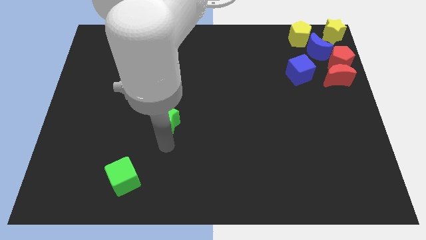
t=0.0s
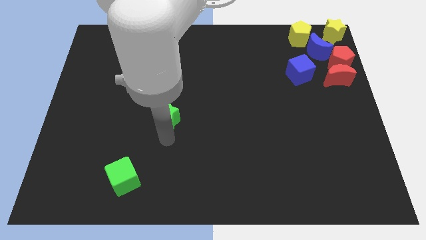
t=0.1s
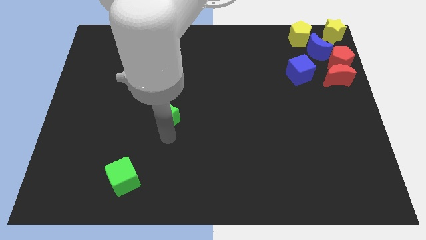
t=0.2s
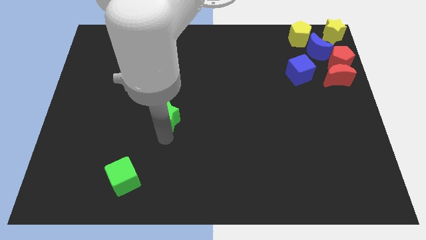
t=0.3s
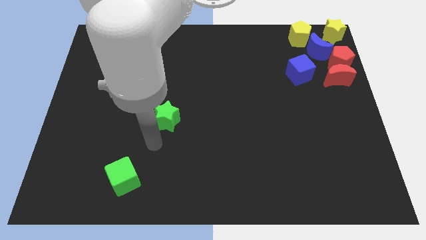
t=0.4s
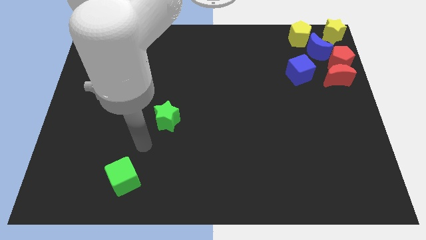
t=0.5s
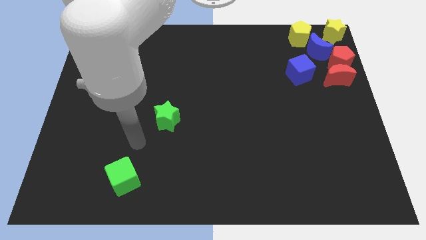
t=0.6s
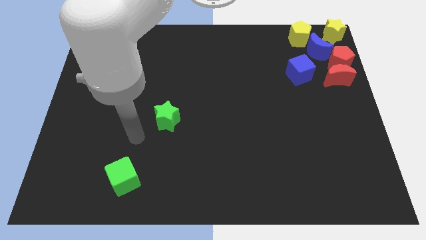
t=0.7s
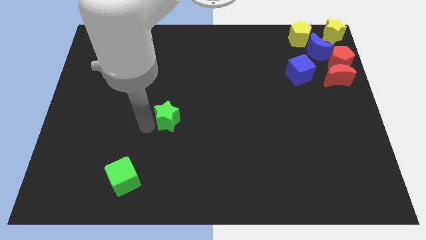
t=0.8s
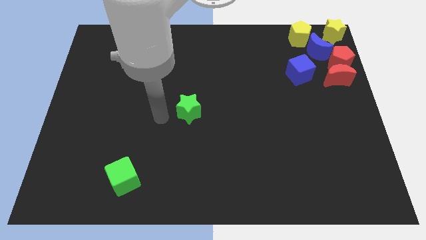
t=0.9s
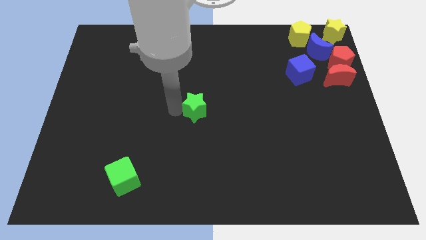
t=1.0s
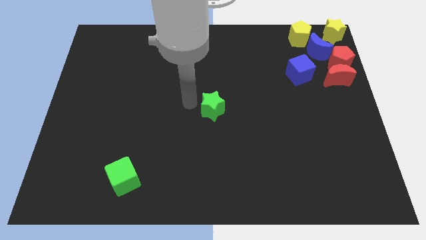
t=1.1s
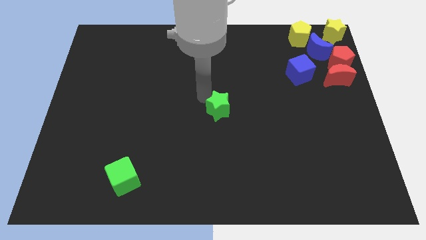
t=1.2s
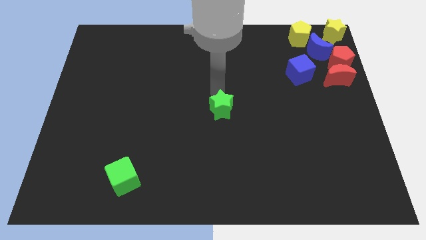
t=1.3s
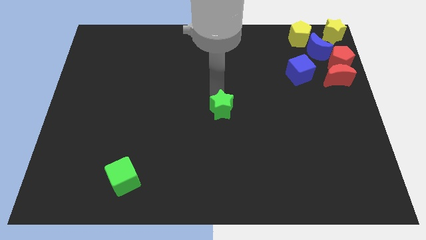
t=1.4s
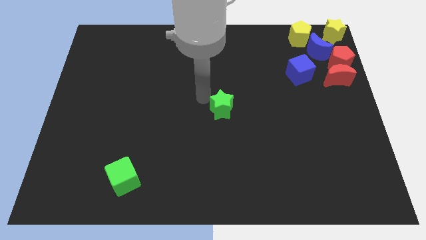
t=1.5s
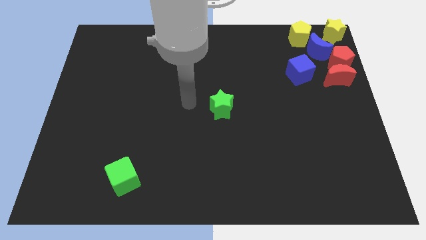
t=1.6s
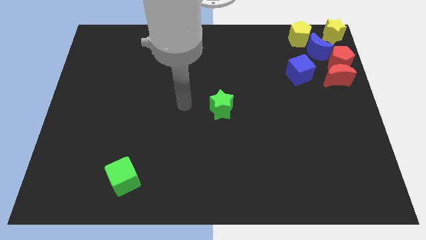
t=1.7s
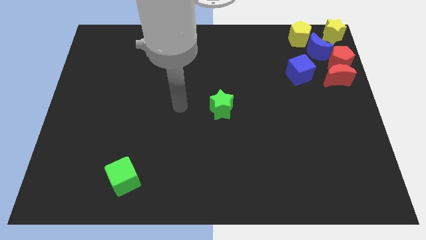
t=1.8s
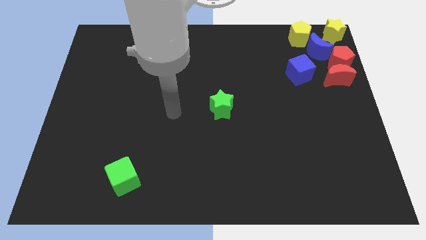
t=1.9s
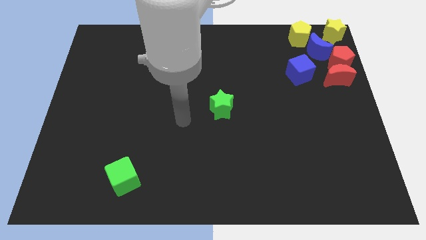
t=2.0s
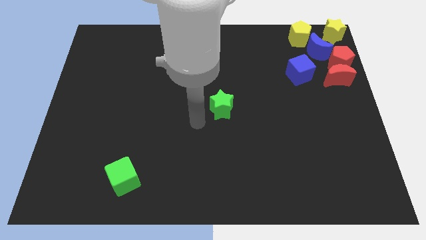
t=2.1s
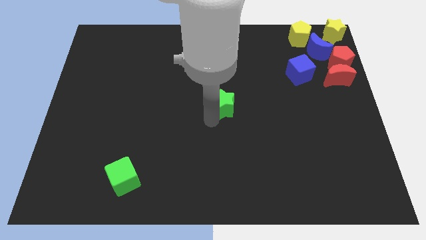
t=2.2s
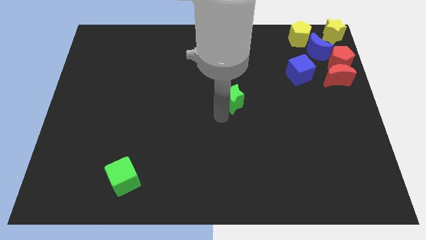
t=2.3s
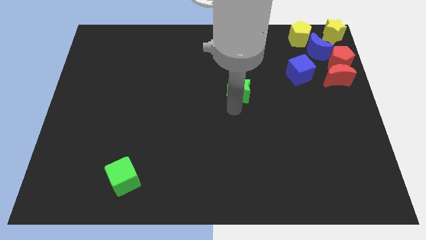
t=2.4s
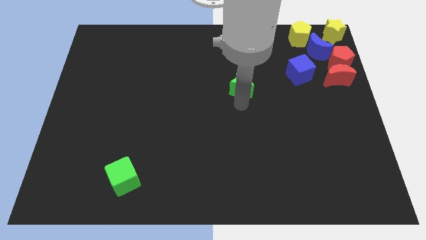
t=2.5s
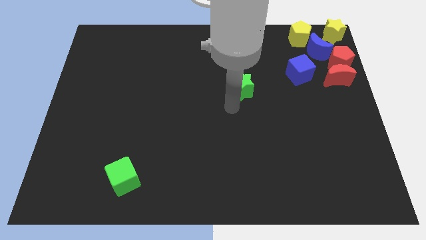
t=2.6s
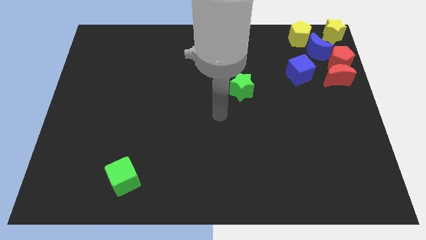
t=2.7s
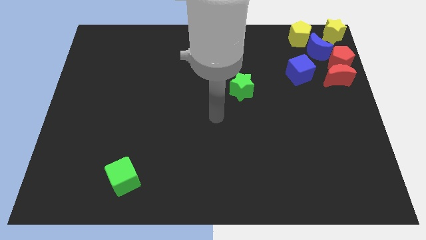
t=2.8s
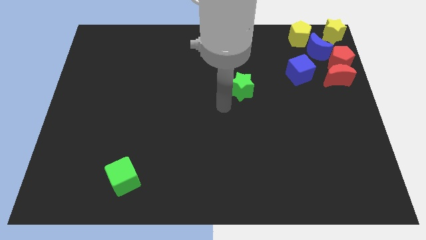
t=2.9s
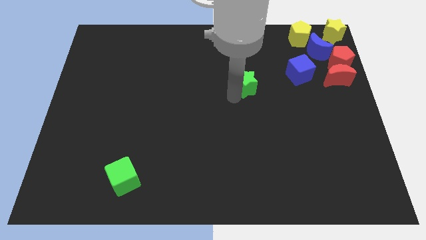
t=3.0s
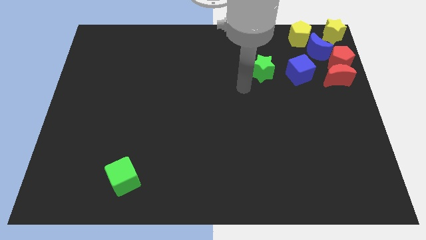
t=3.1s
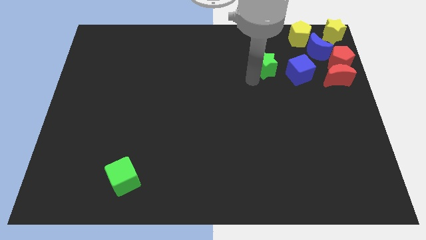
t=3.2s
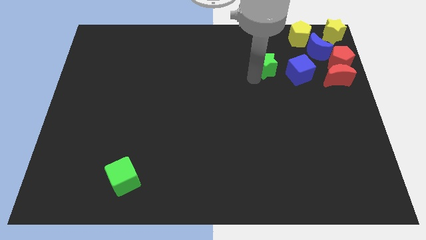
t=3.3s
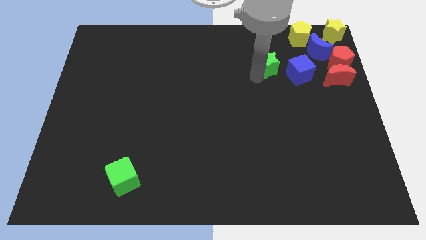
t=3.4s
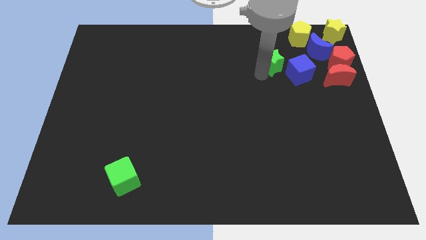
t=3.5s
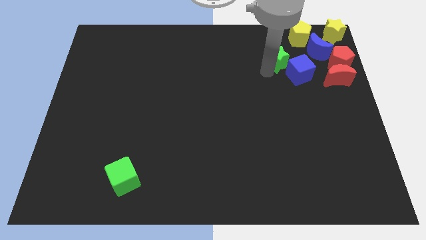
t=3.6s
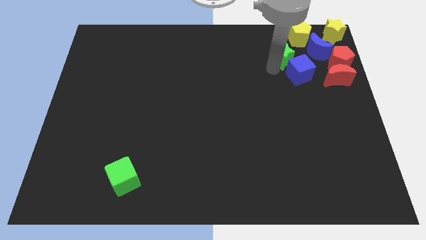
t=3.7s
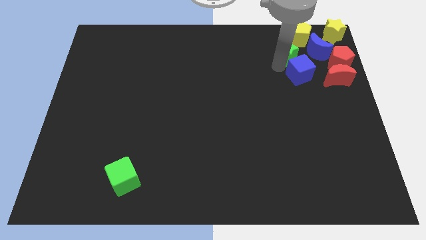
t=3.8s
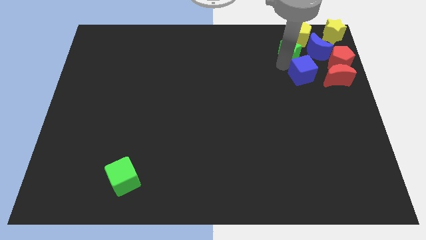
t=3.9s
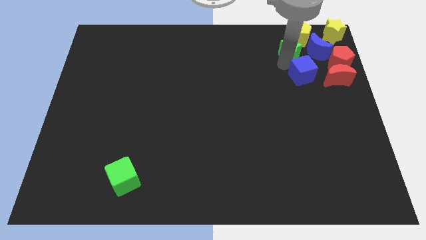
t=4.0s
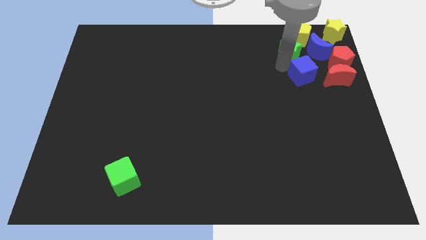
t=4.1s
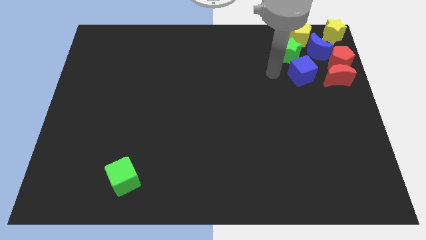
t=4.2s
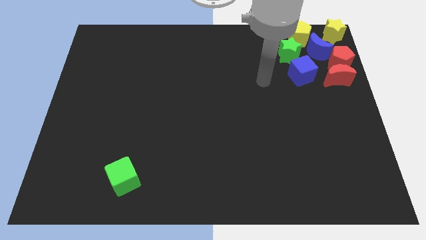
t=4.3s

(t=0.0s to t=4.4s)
place the green star to the left of the blue moon

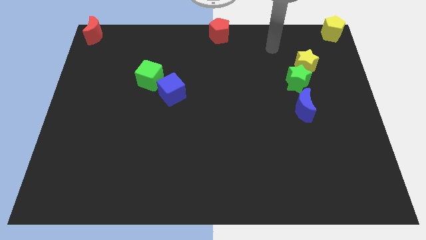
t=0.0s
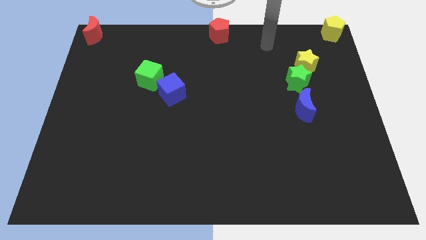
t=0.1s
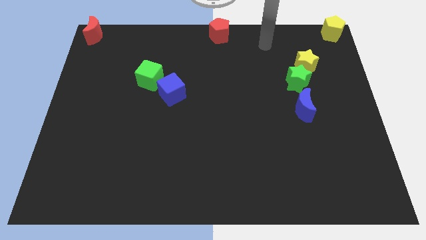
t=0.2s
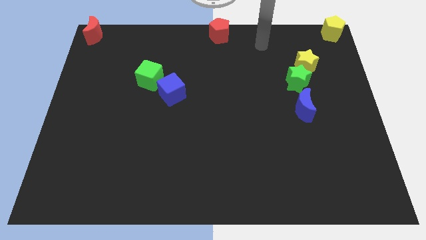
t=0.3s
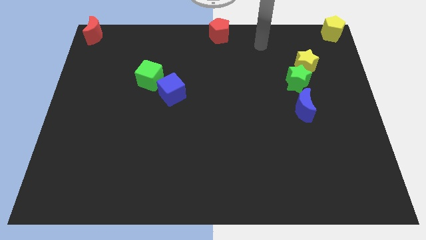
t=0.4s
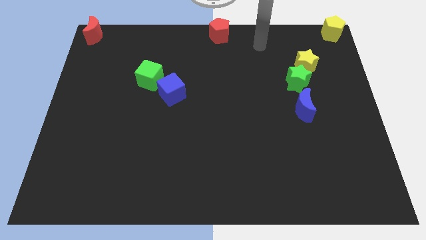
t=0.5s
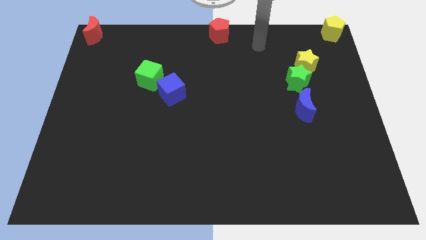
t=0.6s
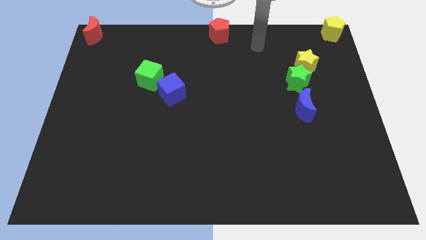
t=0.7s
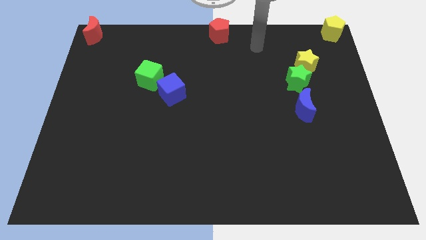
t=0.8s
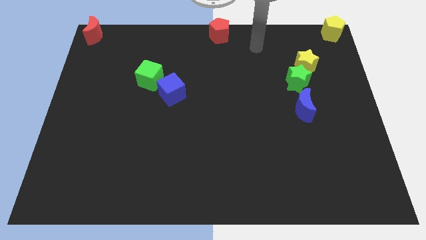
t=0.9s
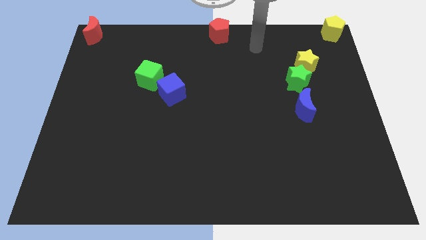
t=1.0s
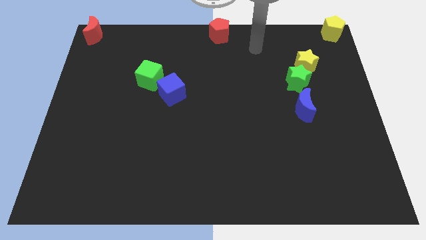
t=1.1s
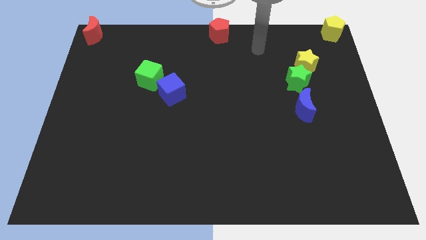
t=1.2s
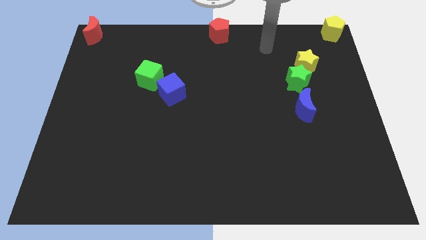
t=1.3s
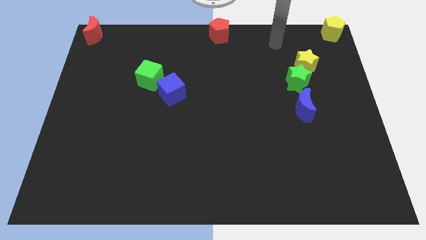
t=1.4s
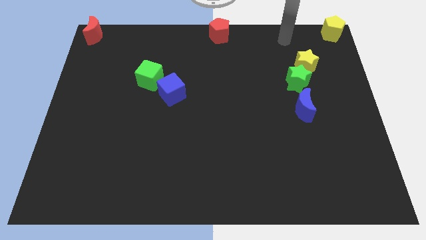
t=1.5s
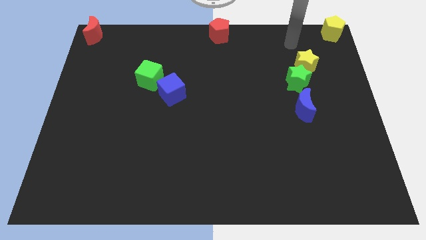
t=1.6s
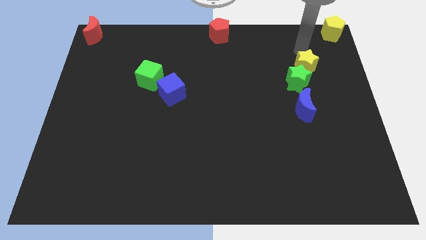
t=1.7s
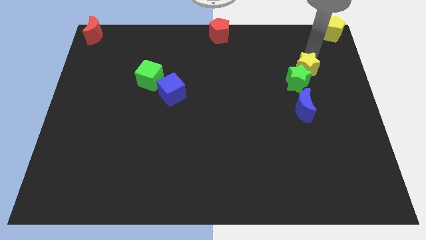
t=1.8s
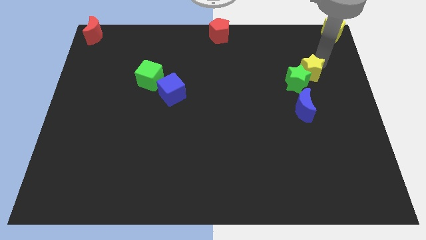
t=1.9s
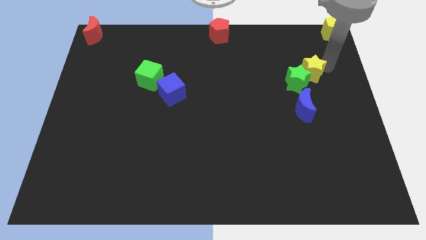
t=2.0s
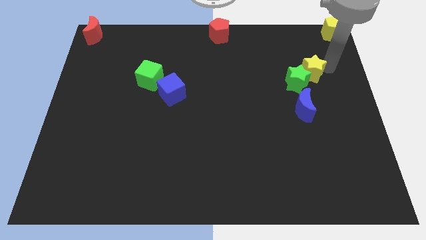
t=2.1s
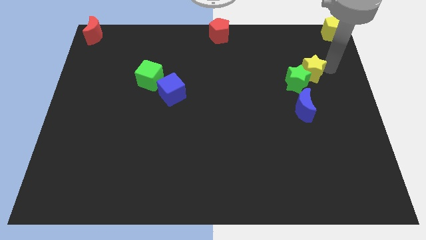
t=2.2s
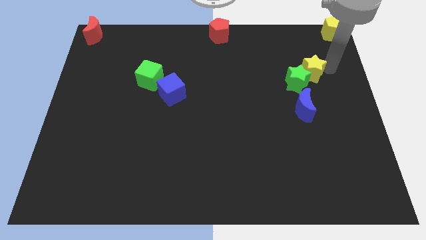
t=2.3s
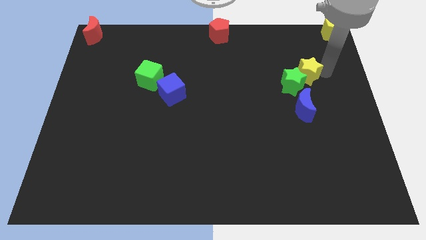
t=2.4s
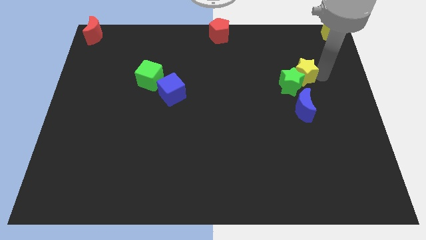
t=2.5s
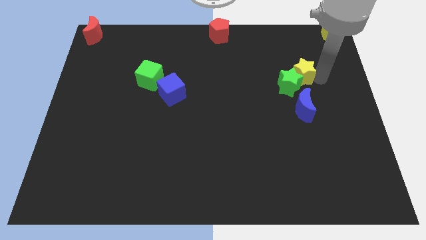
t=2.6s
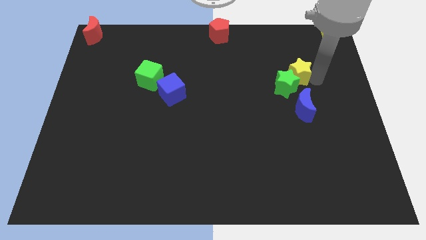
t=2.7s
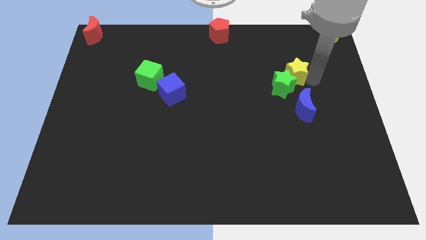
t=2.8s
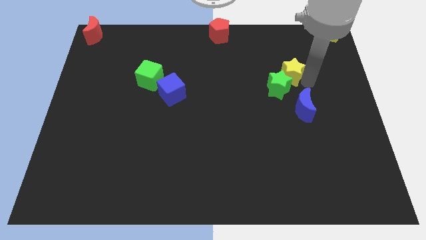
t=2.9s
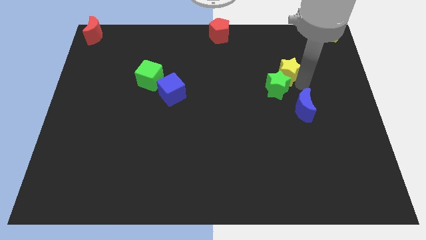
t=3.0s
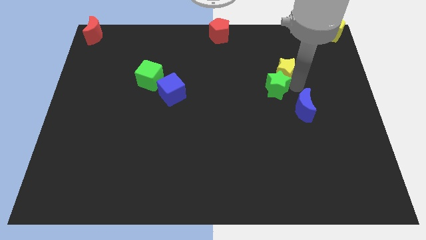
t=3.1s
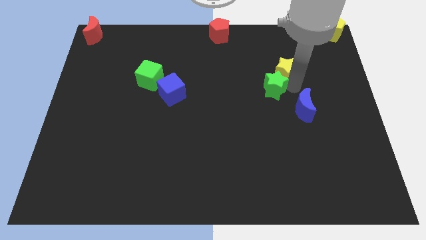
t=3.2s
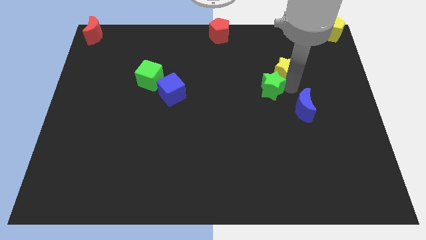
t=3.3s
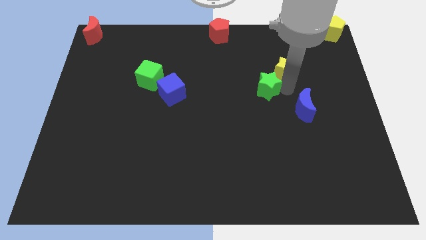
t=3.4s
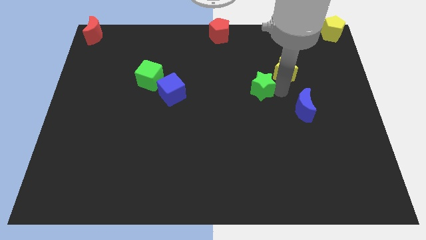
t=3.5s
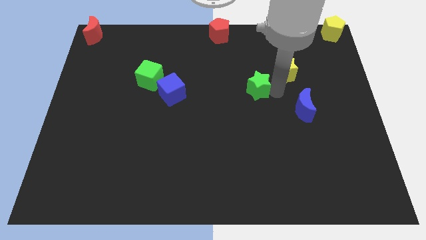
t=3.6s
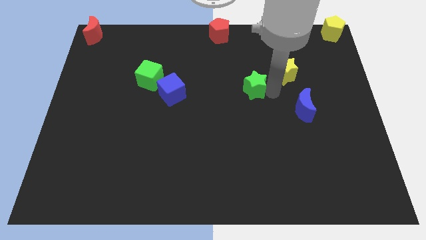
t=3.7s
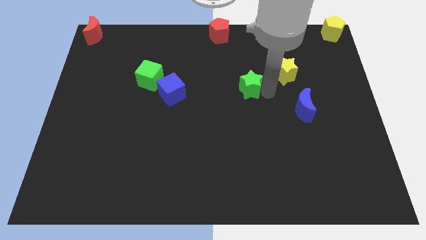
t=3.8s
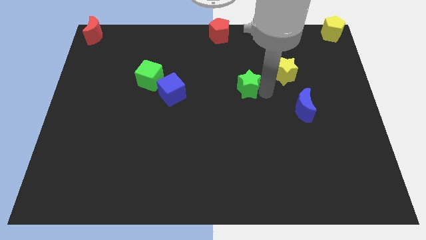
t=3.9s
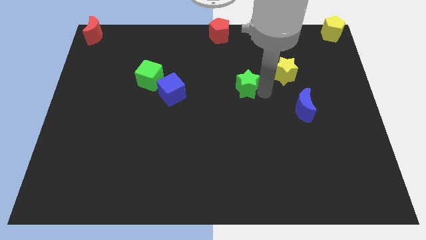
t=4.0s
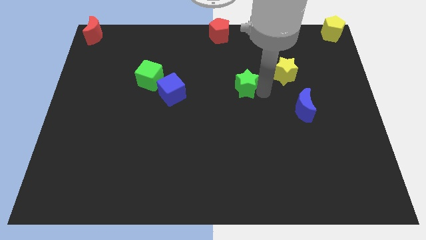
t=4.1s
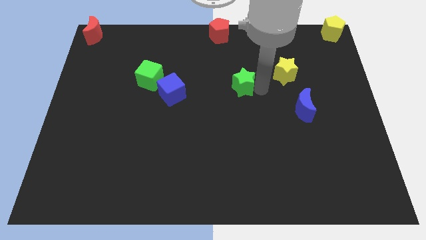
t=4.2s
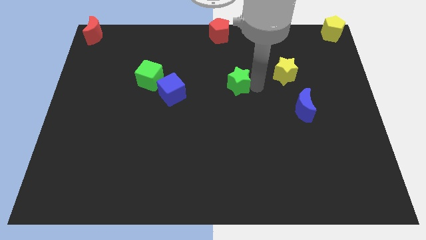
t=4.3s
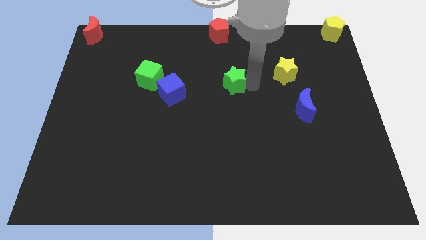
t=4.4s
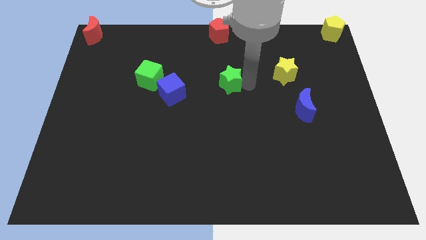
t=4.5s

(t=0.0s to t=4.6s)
slide the green star towards the center of the board
